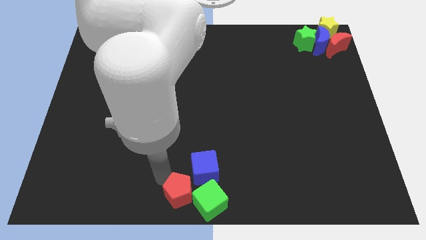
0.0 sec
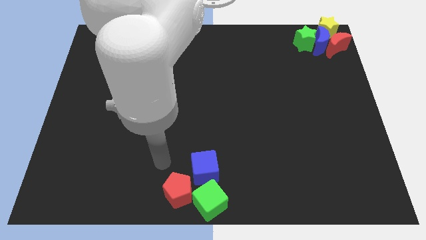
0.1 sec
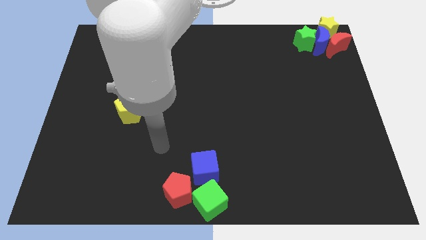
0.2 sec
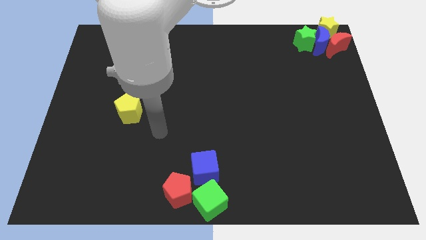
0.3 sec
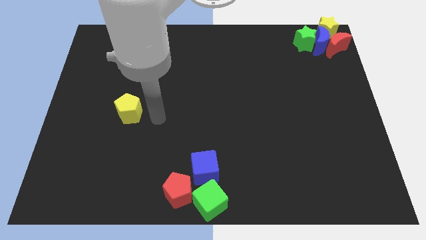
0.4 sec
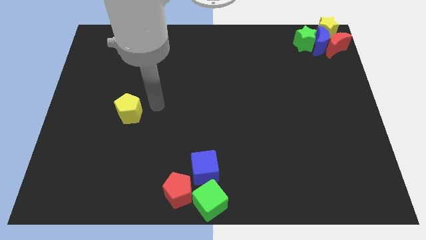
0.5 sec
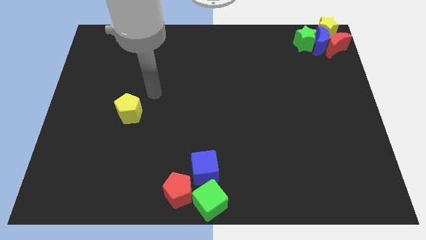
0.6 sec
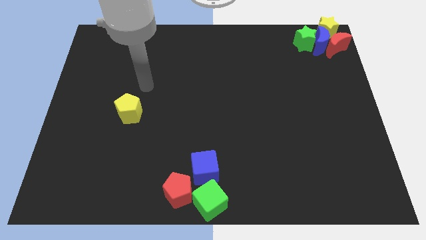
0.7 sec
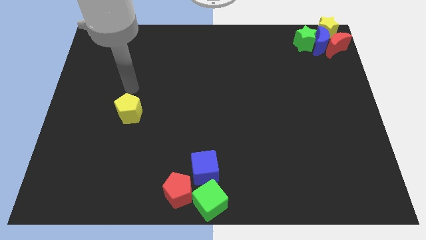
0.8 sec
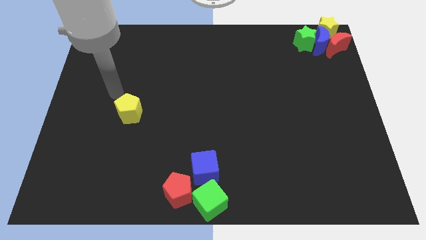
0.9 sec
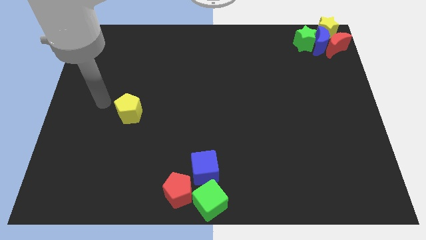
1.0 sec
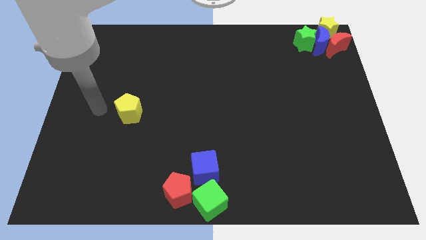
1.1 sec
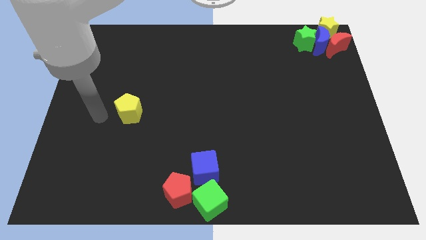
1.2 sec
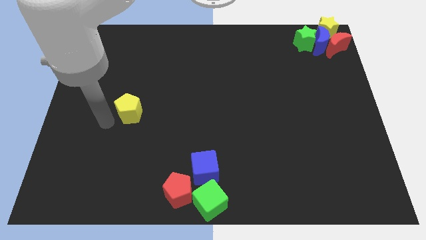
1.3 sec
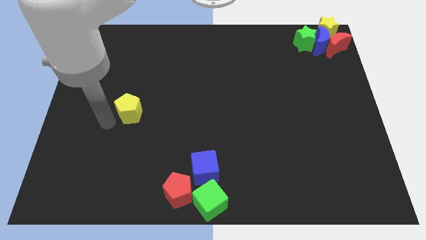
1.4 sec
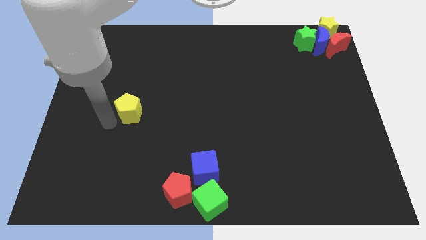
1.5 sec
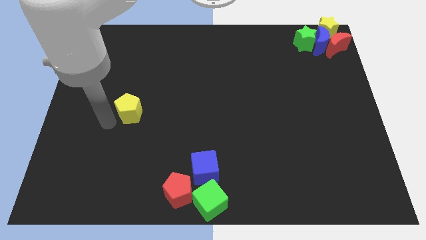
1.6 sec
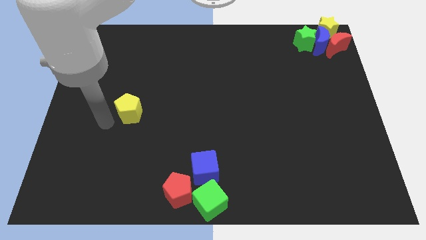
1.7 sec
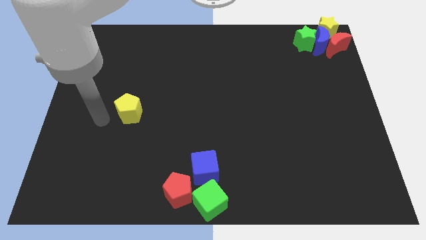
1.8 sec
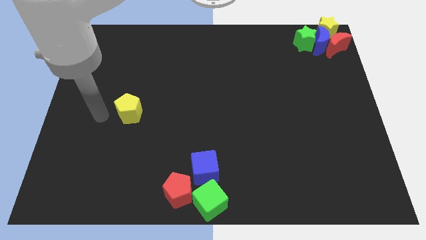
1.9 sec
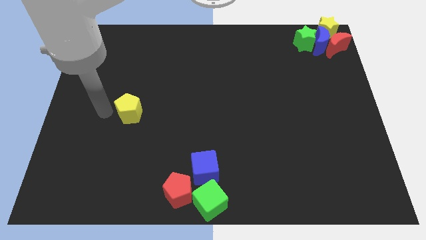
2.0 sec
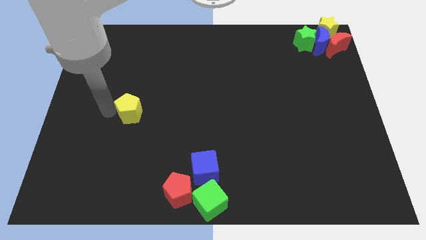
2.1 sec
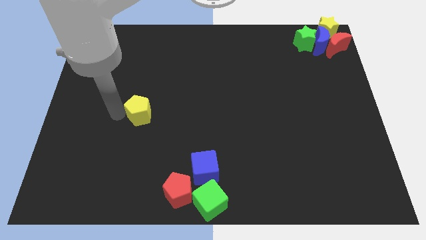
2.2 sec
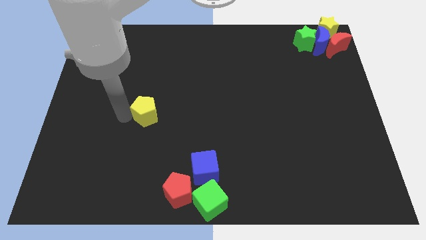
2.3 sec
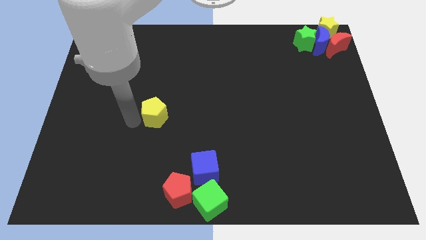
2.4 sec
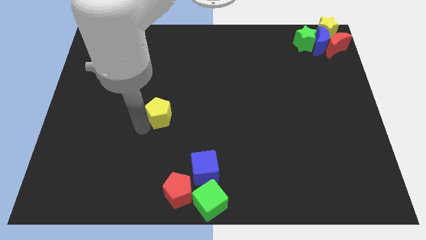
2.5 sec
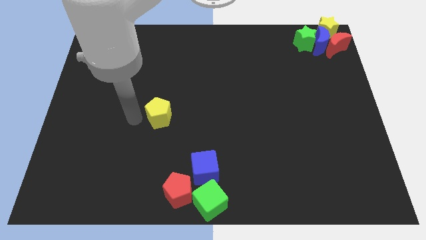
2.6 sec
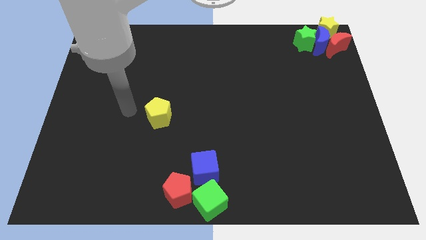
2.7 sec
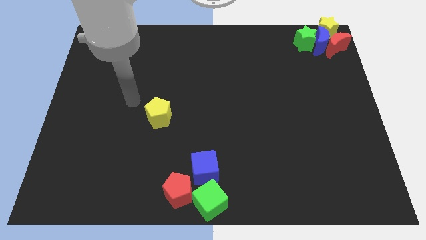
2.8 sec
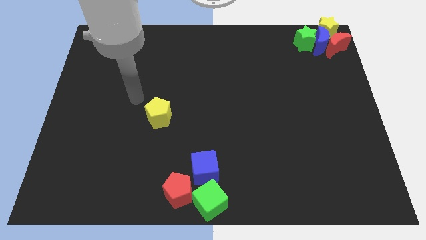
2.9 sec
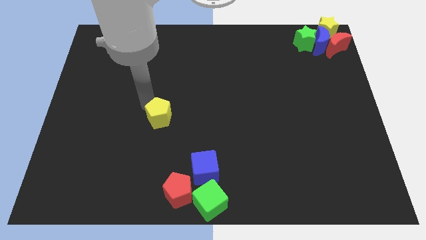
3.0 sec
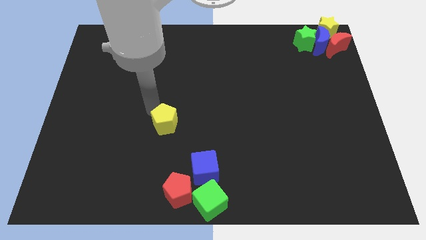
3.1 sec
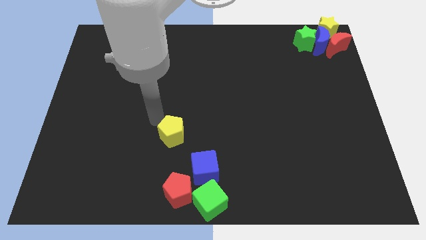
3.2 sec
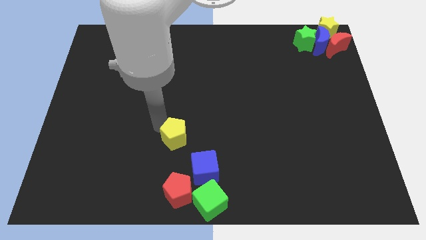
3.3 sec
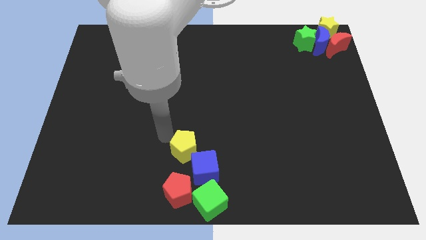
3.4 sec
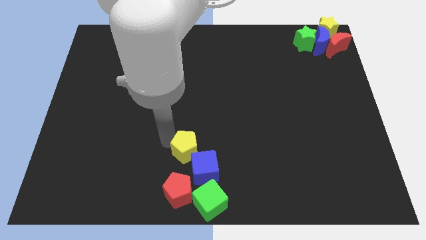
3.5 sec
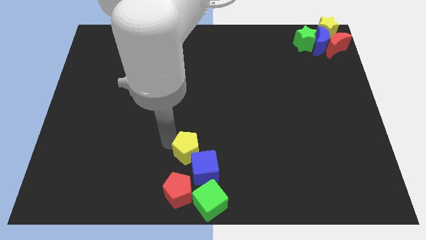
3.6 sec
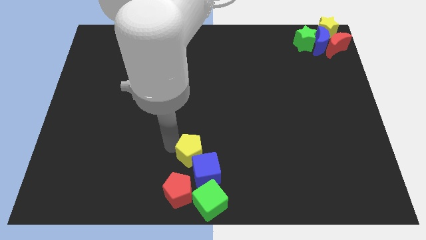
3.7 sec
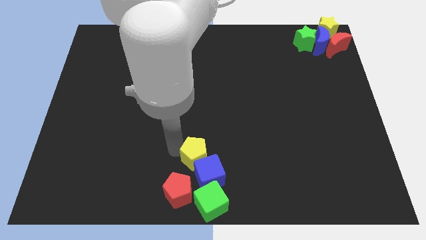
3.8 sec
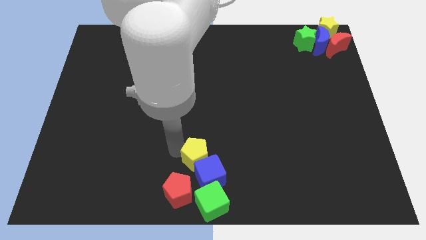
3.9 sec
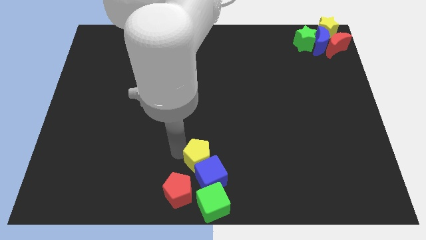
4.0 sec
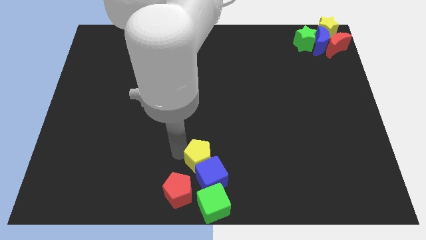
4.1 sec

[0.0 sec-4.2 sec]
push the yellow pentagon to the top side of the blue block

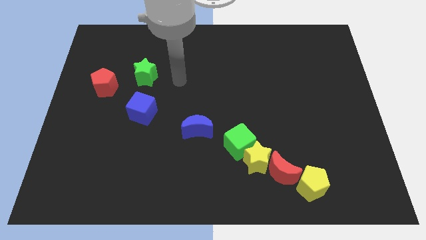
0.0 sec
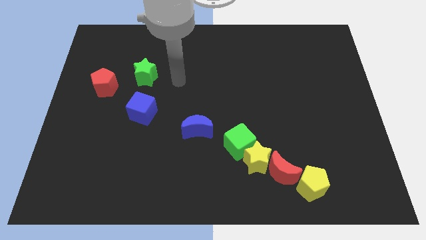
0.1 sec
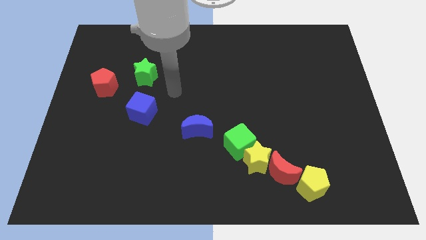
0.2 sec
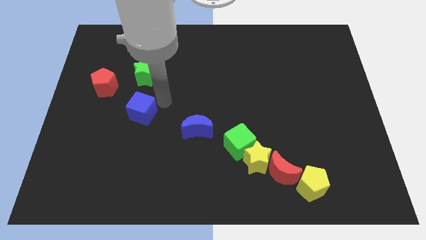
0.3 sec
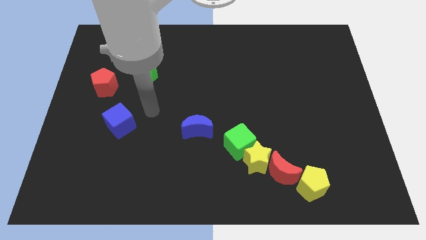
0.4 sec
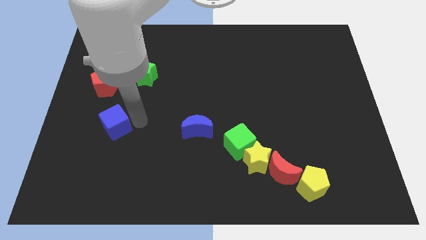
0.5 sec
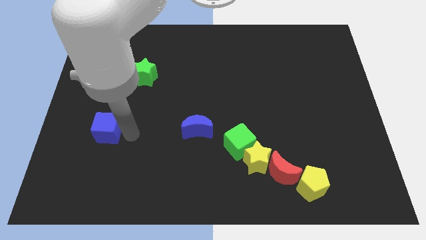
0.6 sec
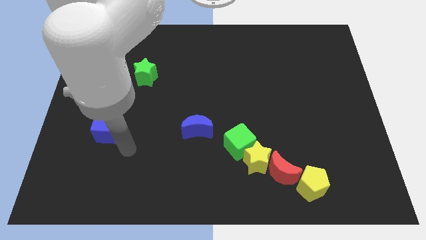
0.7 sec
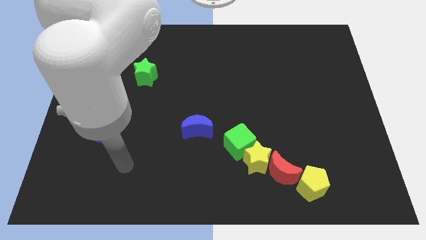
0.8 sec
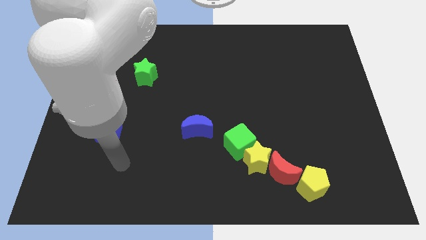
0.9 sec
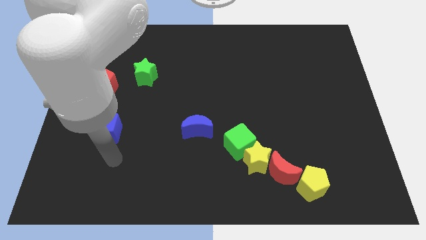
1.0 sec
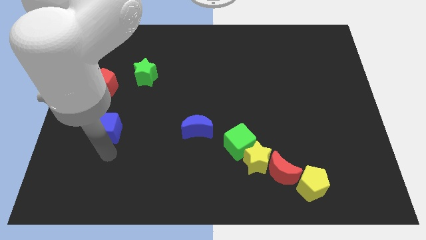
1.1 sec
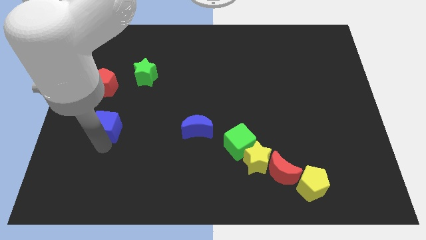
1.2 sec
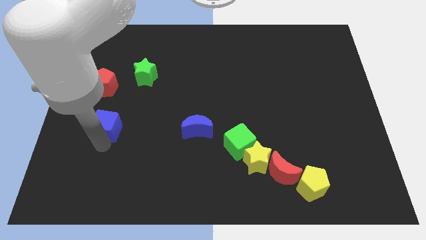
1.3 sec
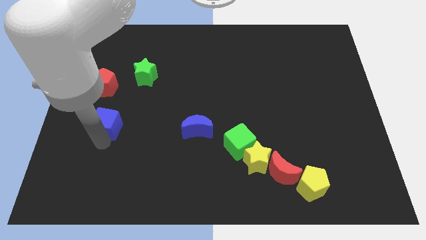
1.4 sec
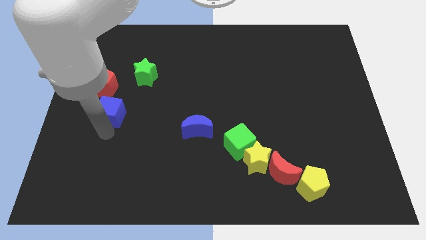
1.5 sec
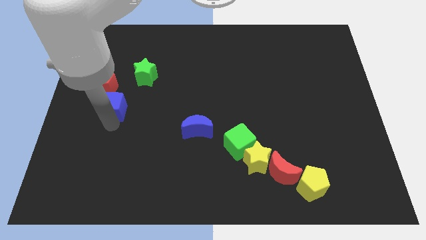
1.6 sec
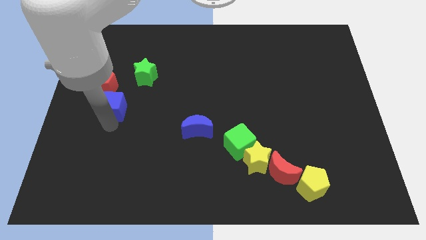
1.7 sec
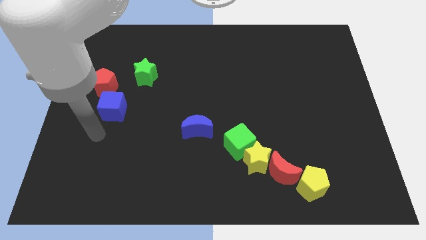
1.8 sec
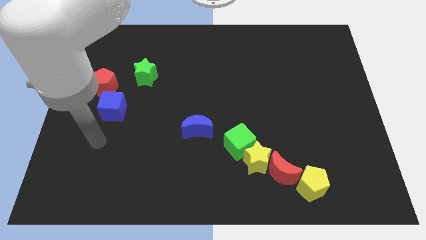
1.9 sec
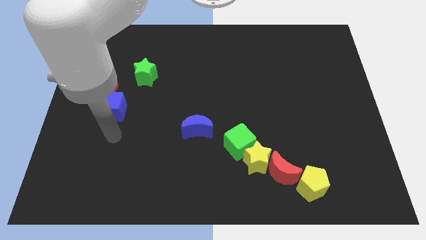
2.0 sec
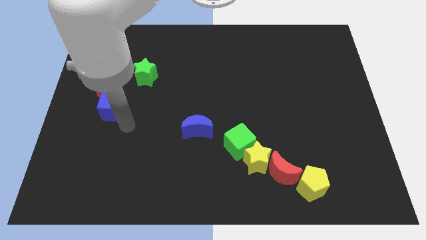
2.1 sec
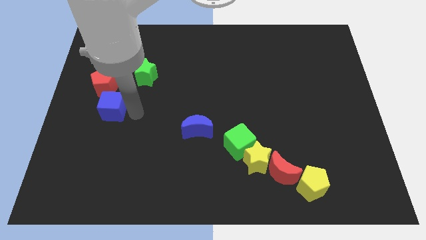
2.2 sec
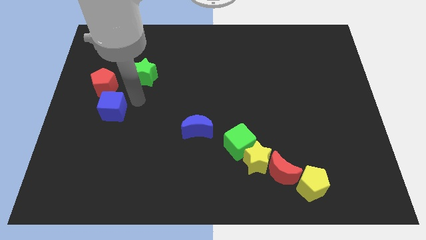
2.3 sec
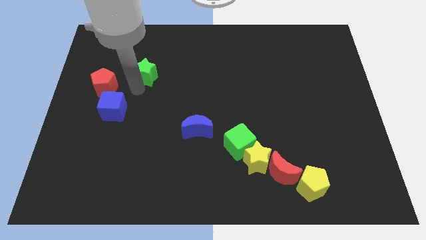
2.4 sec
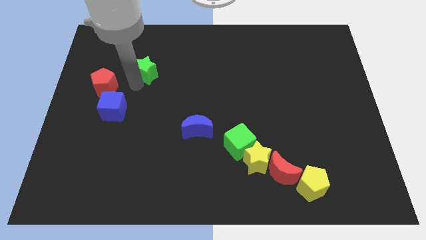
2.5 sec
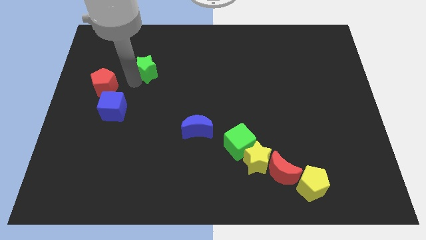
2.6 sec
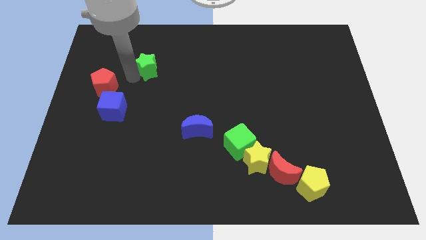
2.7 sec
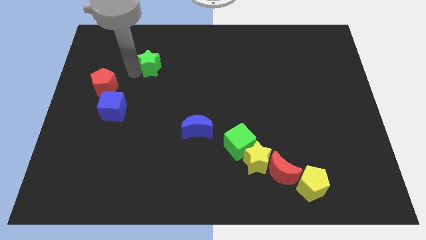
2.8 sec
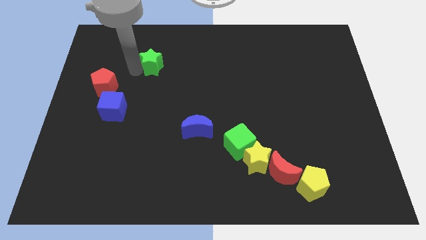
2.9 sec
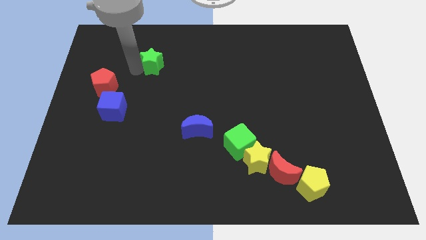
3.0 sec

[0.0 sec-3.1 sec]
push the blue cube to the bottom right side of the red pentagon

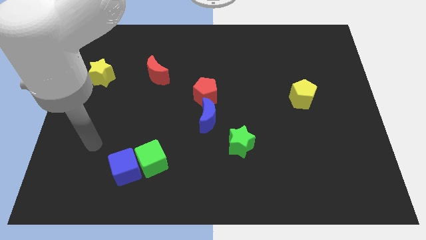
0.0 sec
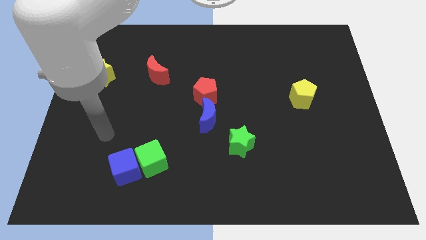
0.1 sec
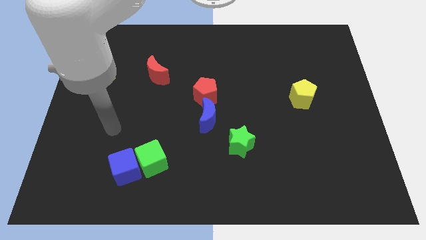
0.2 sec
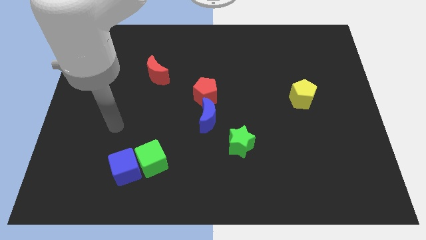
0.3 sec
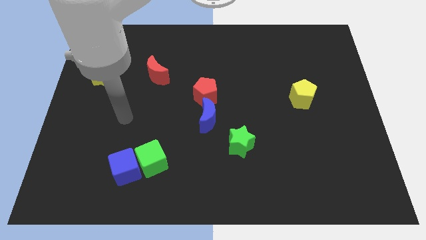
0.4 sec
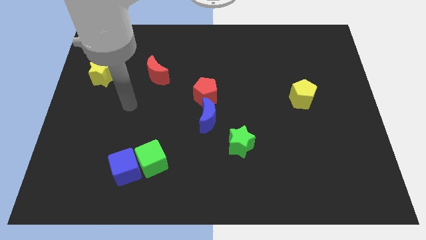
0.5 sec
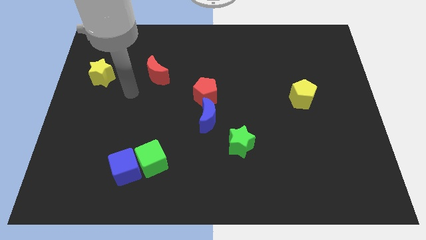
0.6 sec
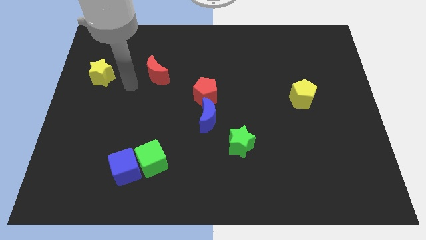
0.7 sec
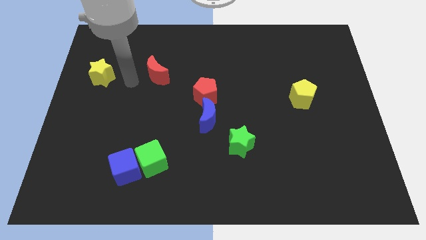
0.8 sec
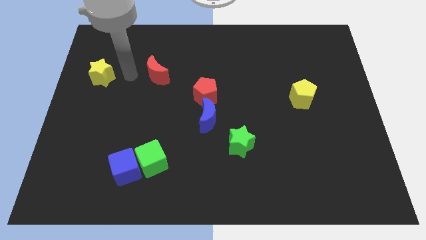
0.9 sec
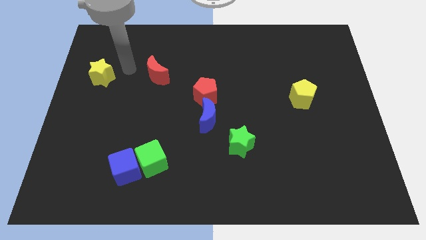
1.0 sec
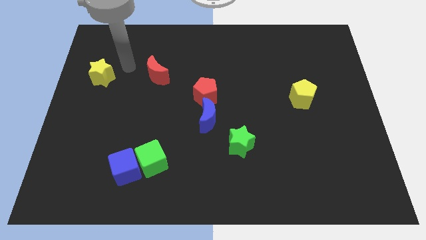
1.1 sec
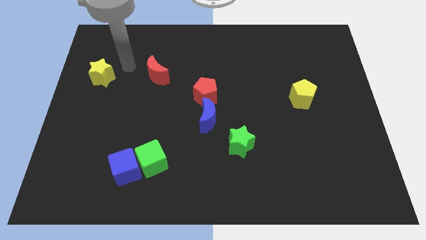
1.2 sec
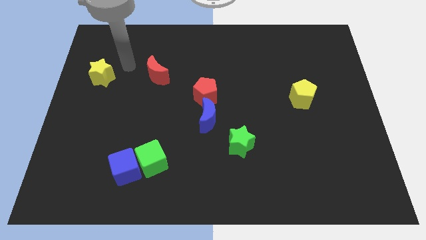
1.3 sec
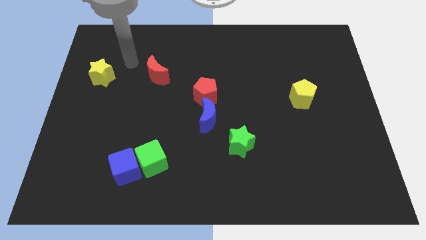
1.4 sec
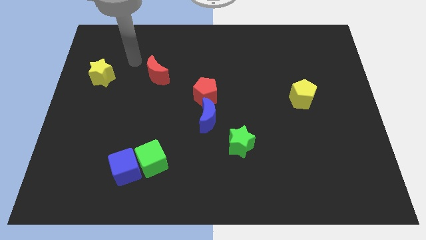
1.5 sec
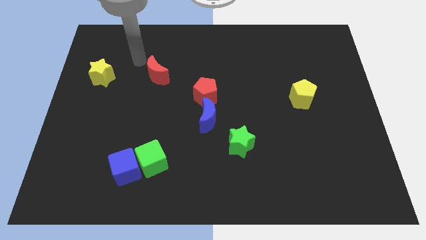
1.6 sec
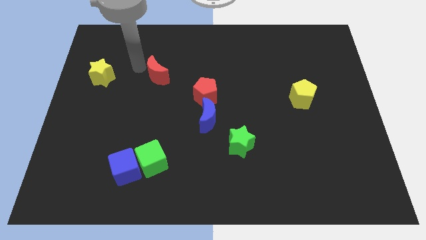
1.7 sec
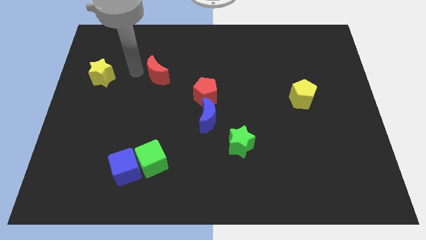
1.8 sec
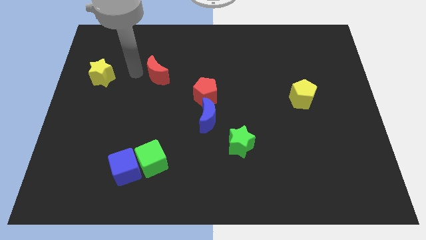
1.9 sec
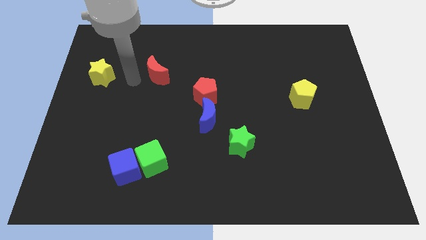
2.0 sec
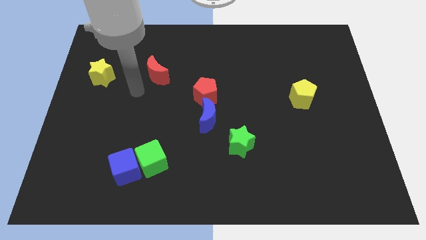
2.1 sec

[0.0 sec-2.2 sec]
point your arm in between the red crescent and the yellow star
